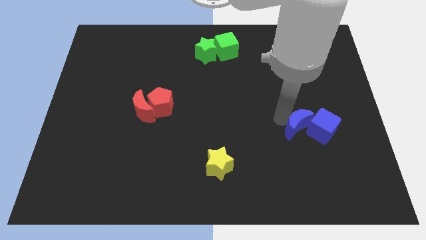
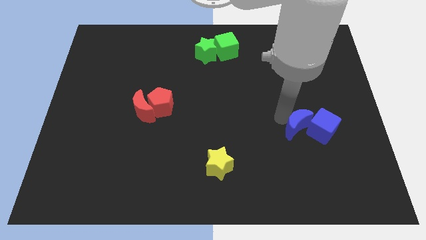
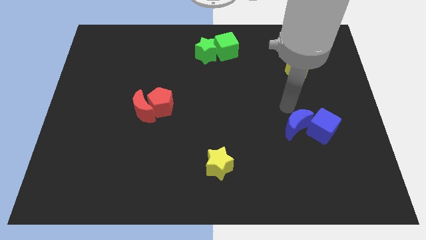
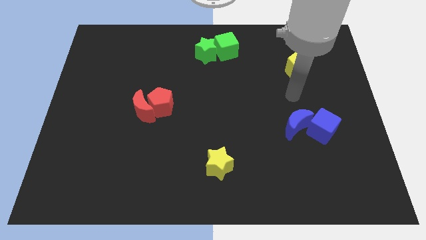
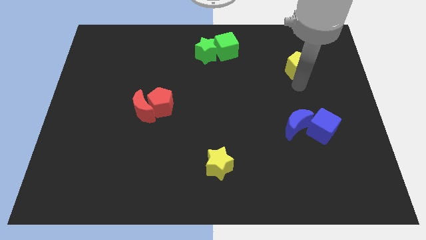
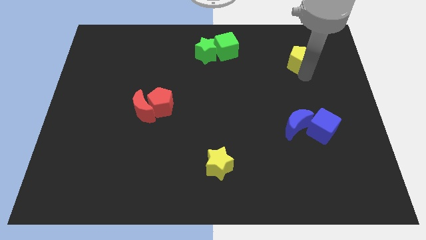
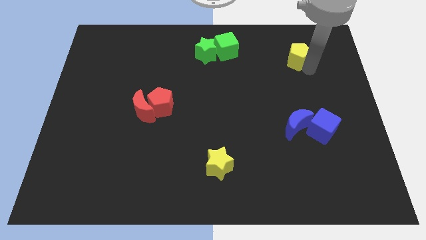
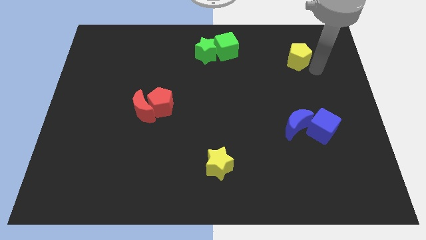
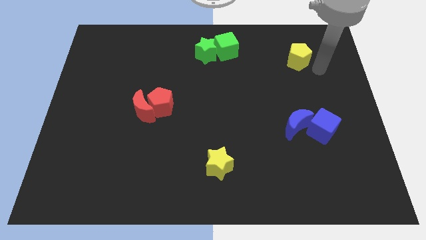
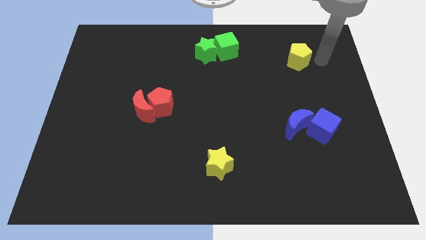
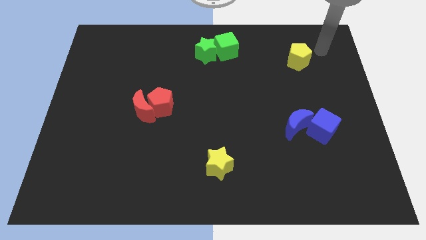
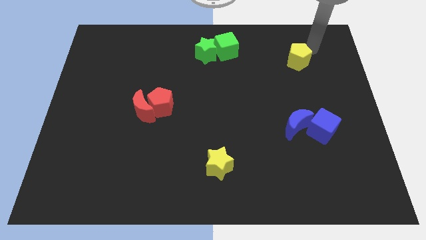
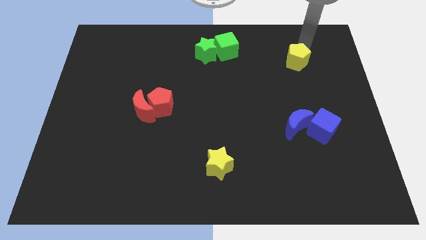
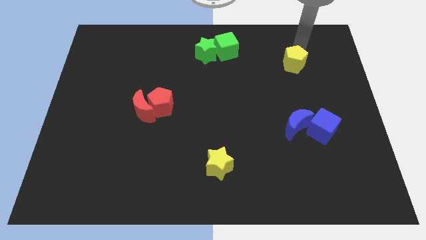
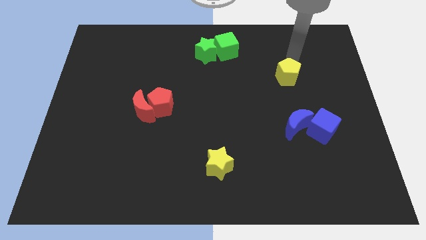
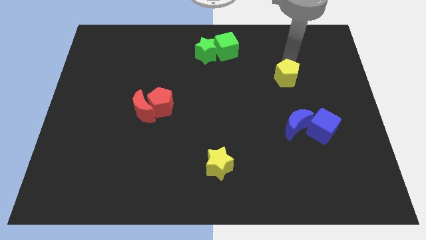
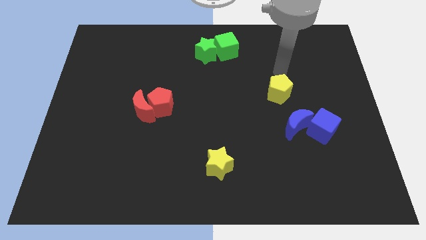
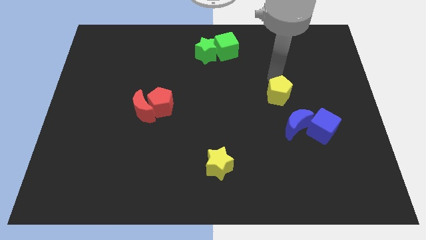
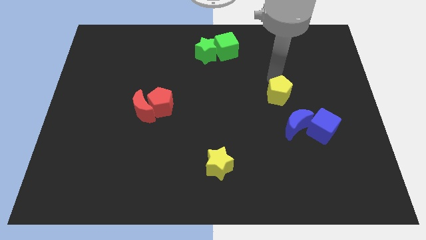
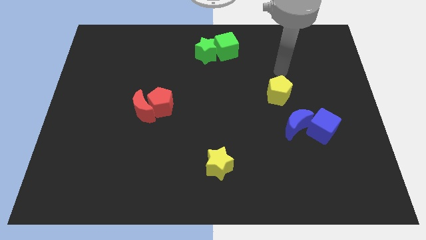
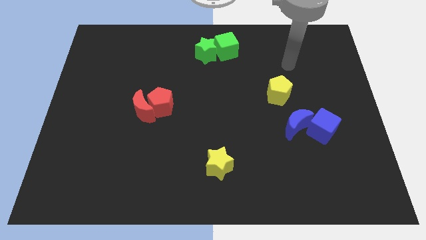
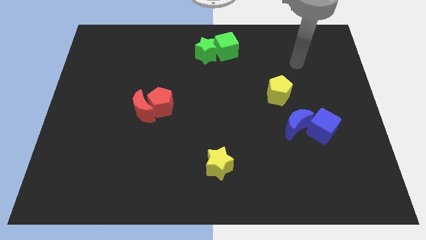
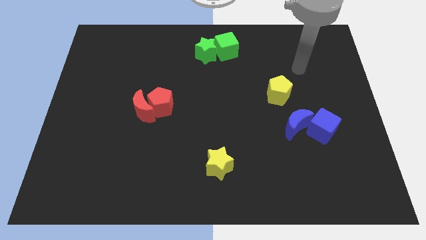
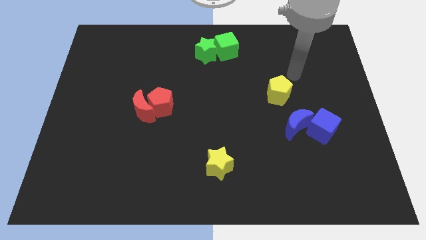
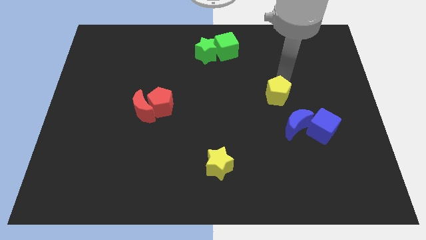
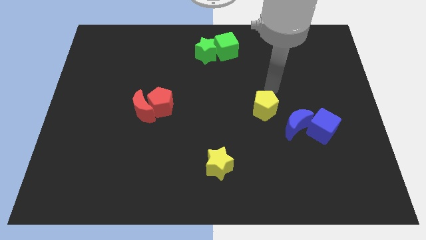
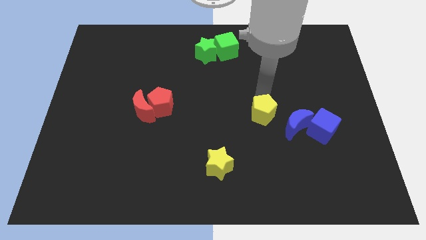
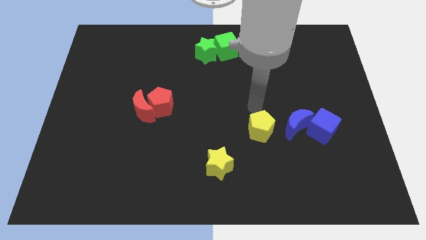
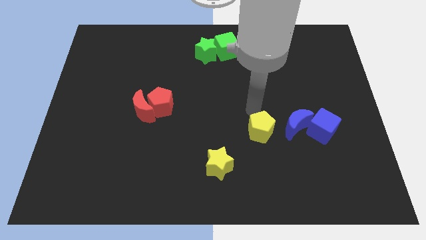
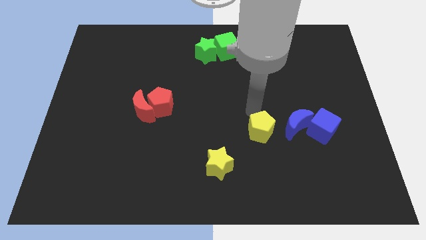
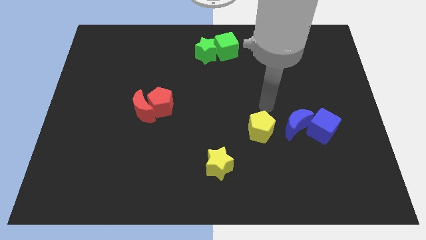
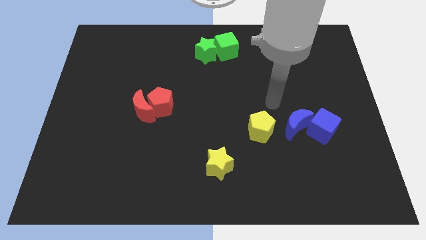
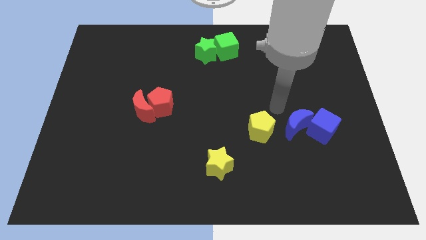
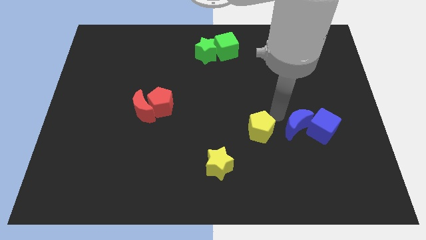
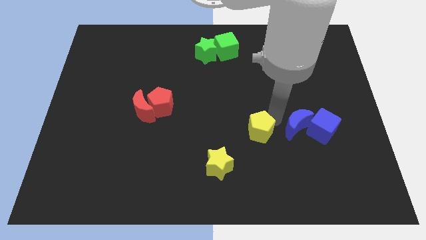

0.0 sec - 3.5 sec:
move the yellow pentagon to the left of the blue moon

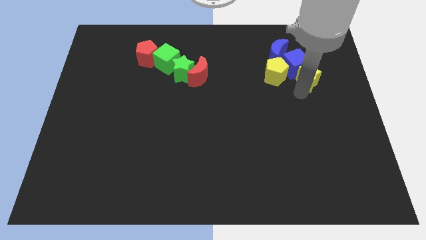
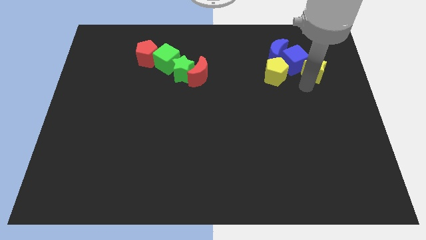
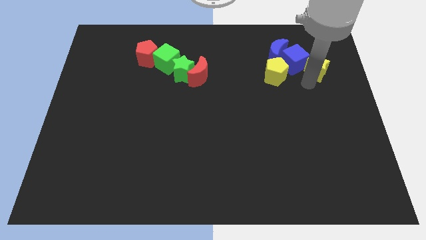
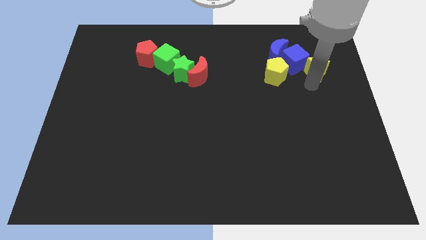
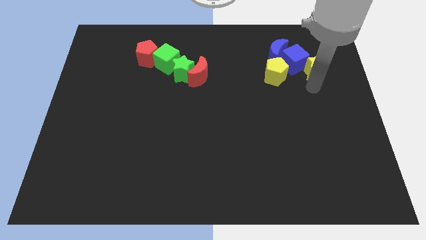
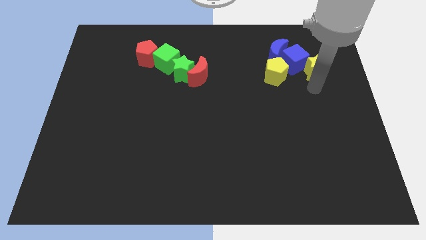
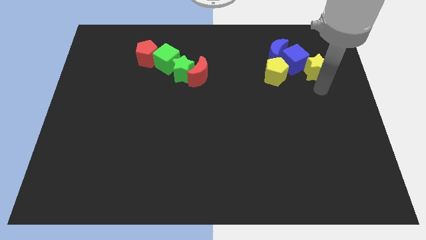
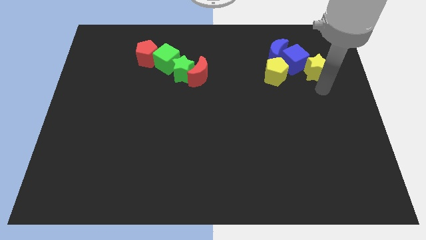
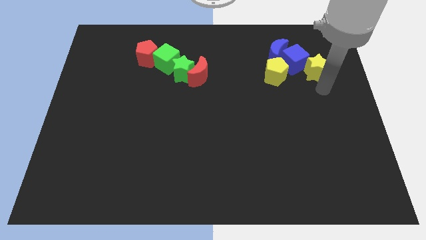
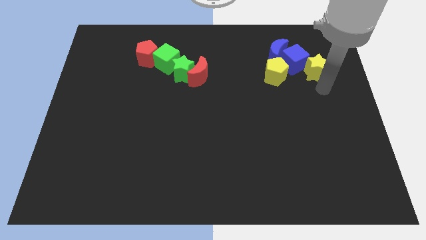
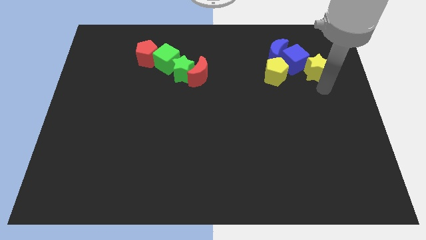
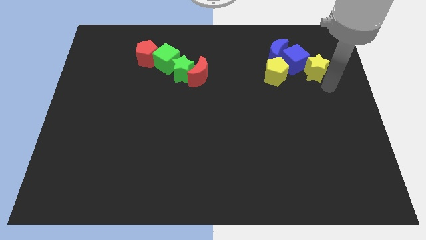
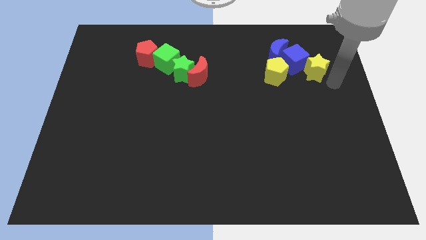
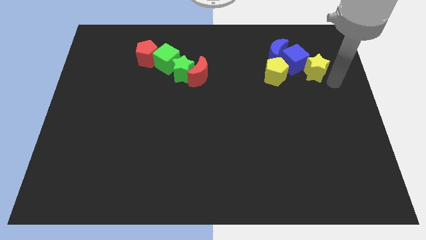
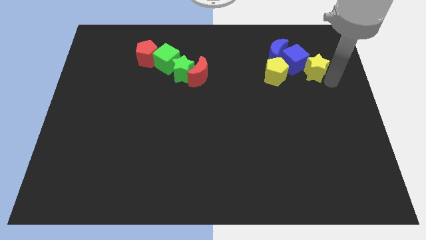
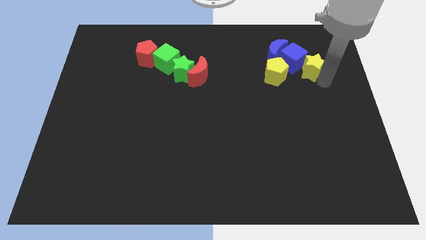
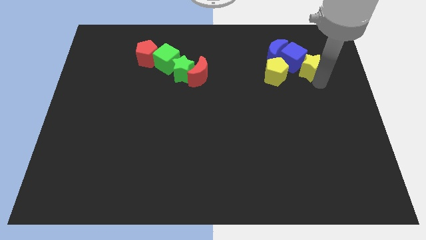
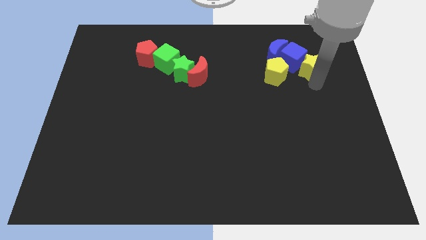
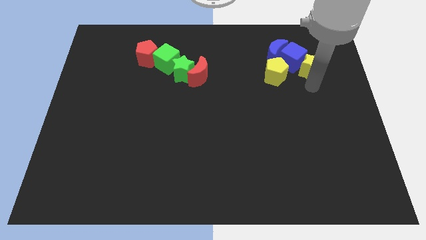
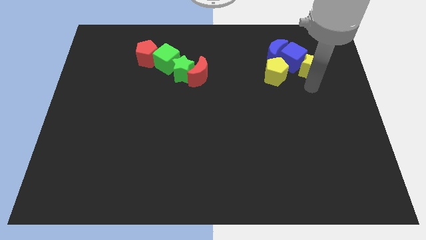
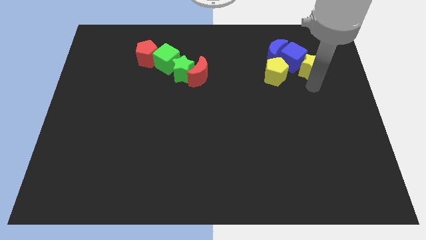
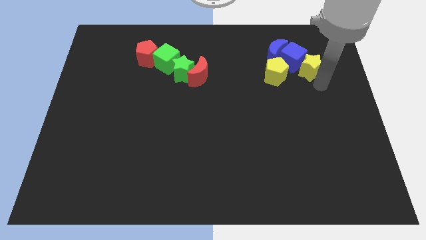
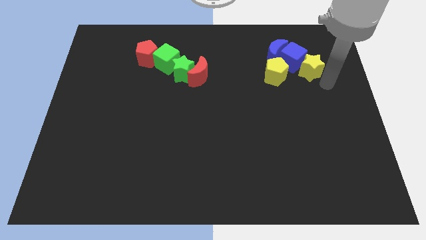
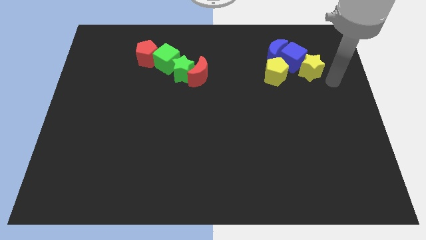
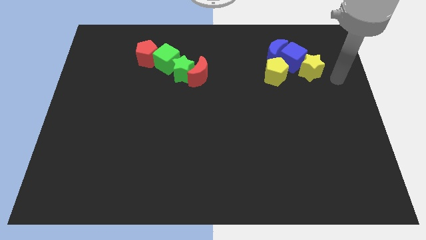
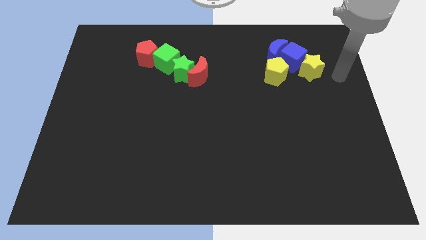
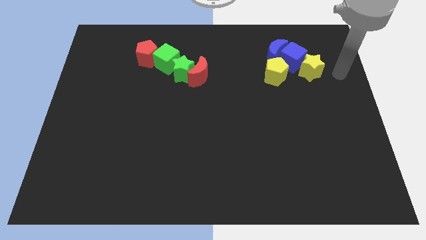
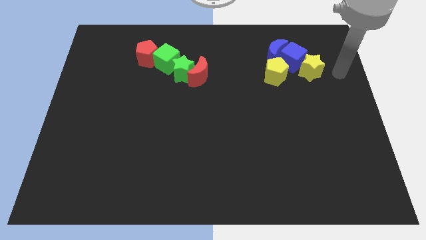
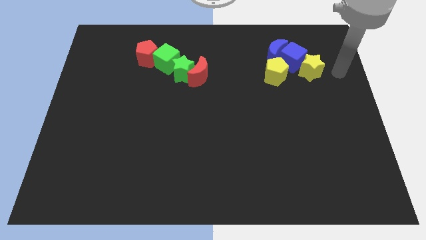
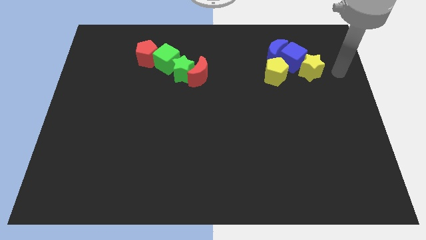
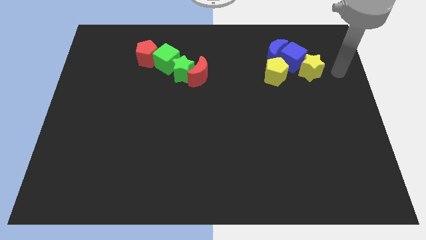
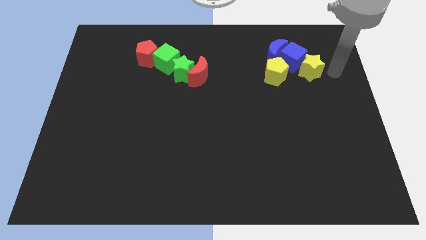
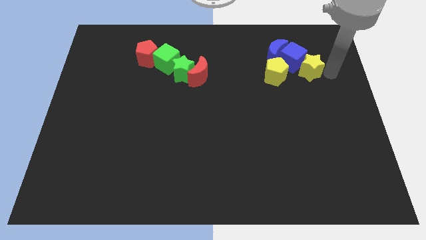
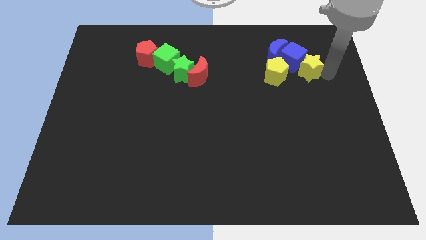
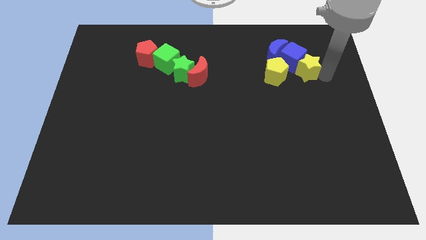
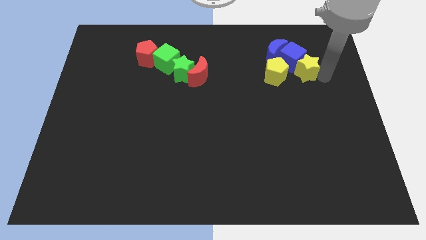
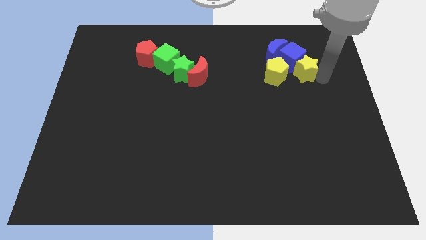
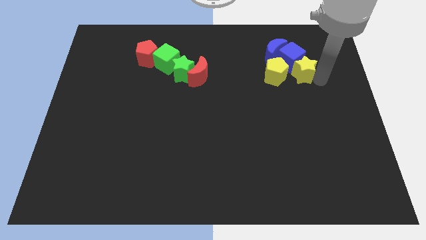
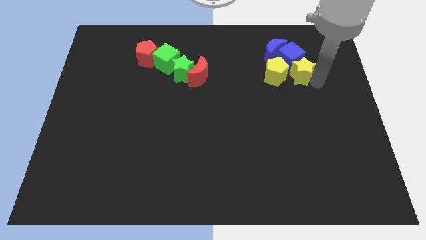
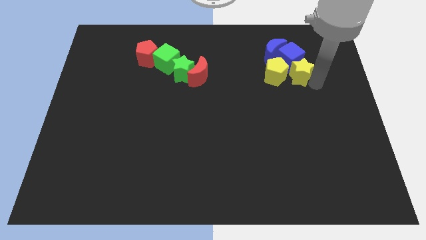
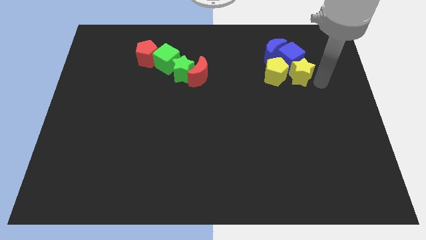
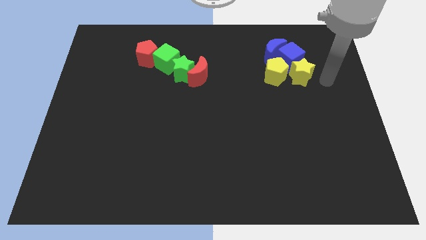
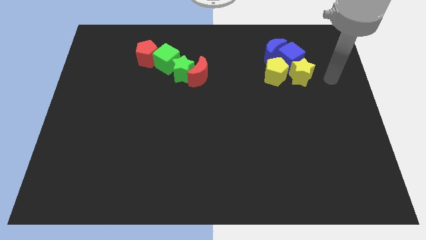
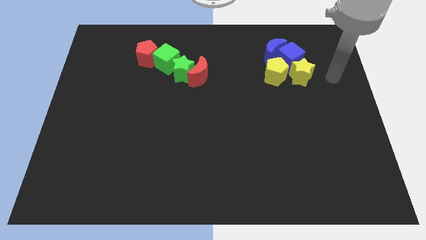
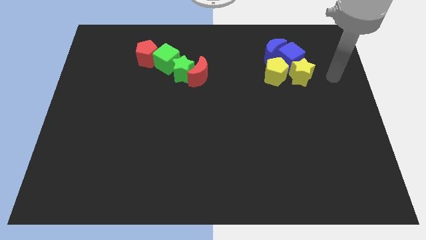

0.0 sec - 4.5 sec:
put the yellow star on the right side of the yellow pentagon

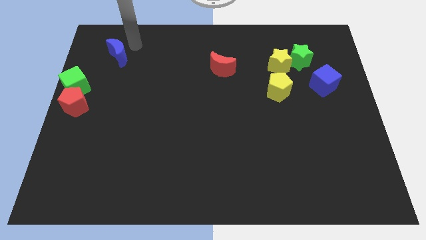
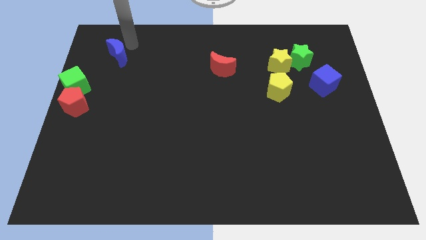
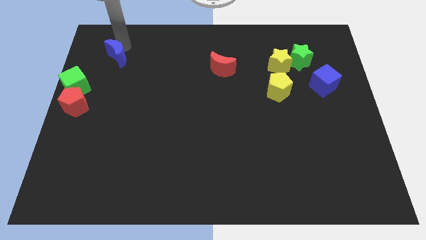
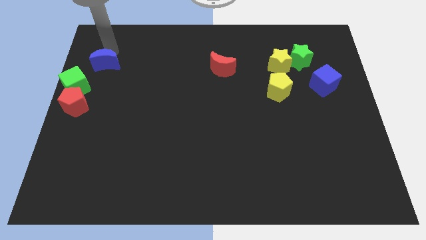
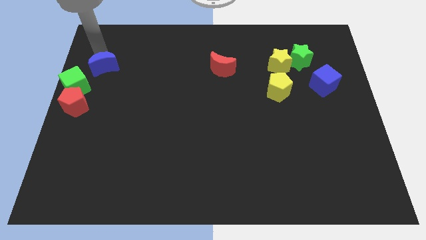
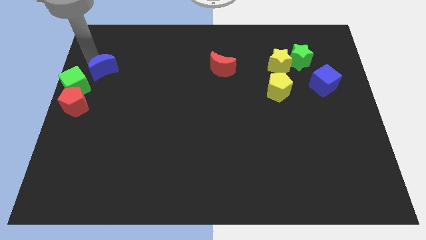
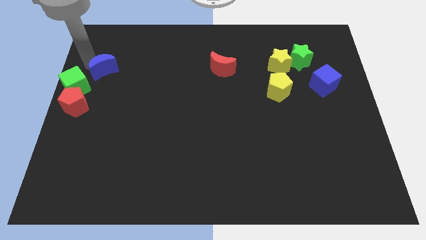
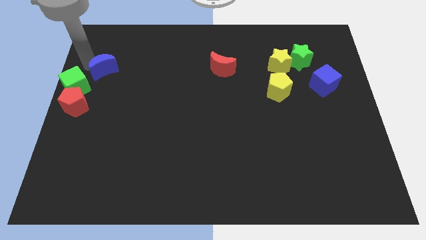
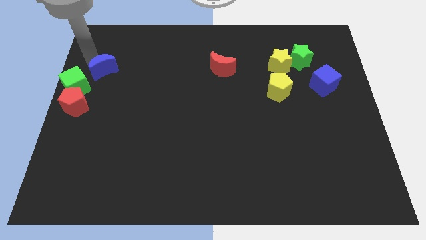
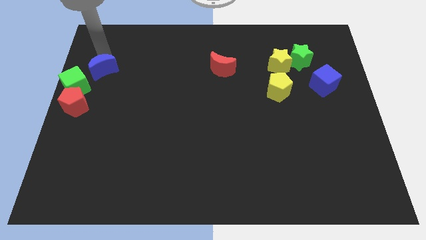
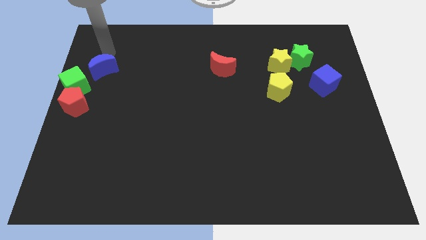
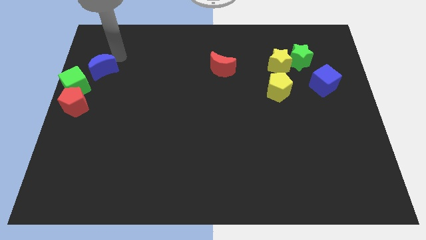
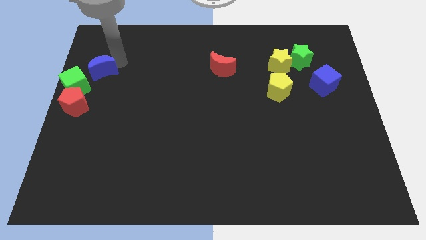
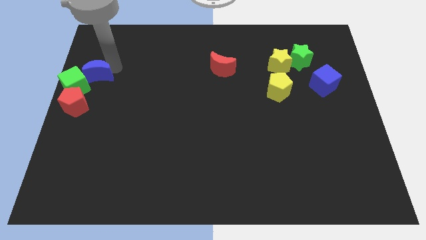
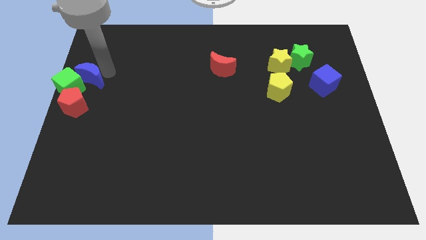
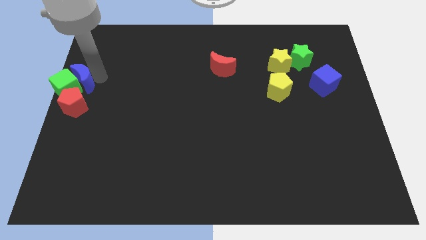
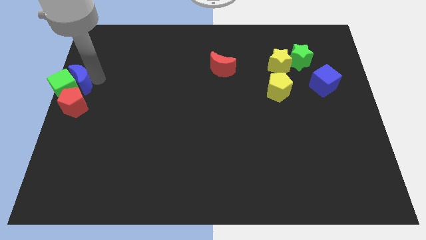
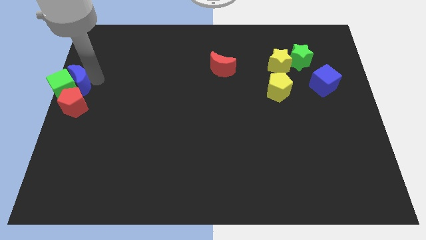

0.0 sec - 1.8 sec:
push the blue moon into the green cube
